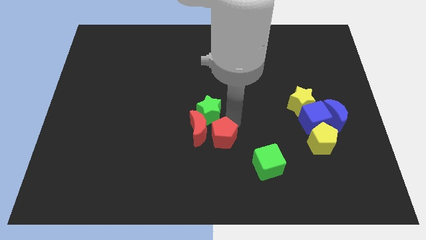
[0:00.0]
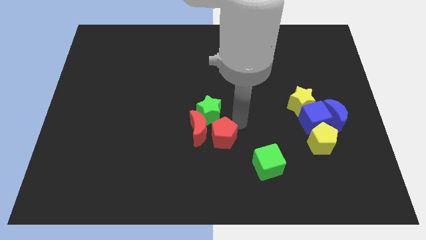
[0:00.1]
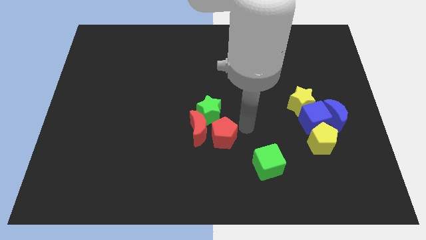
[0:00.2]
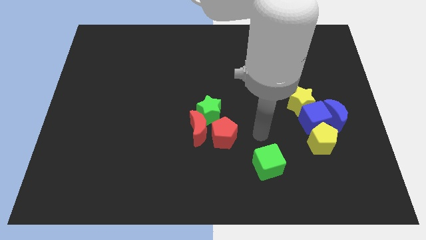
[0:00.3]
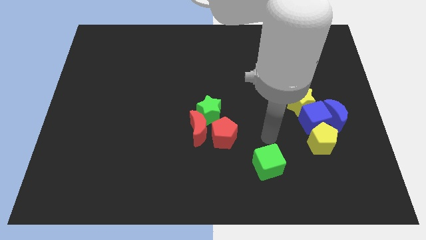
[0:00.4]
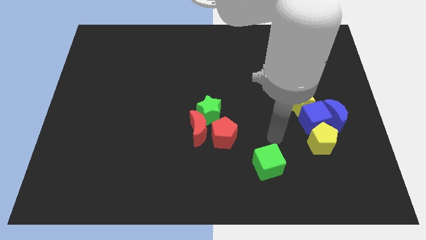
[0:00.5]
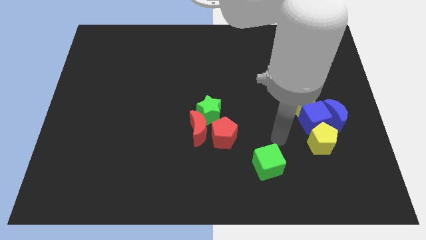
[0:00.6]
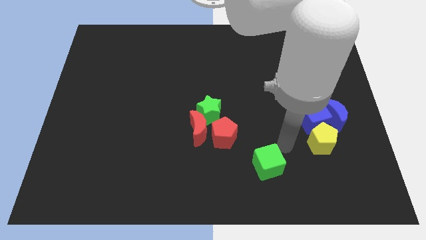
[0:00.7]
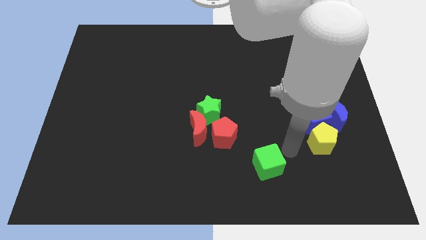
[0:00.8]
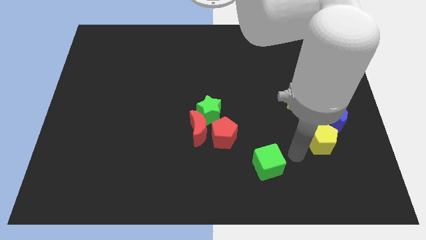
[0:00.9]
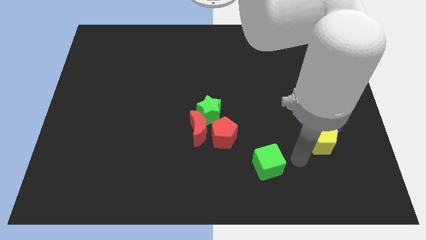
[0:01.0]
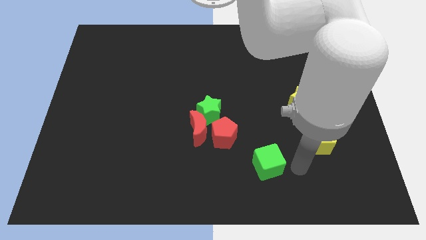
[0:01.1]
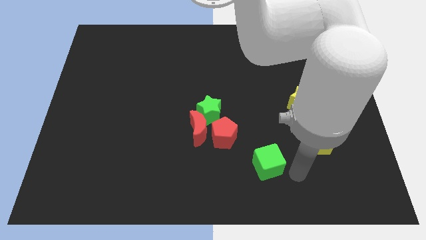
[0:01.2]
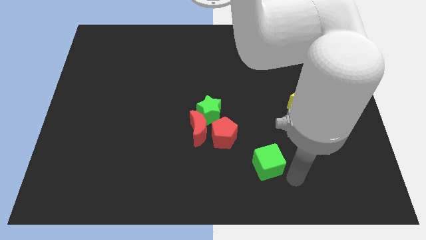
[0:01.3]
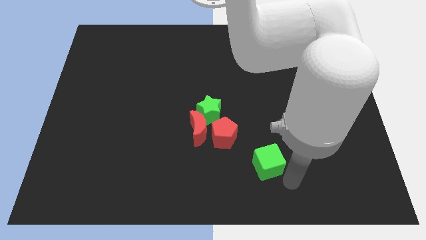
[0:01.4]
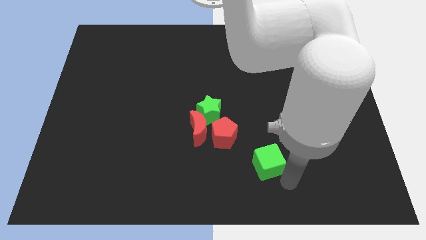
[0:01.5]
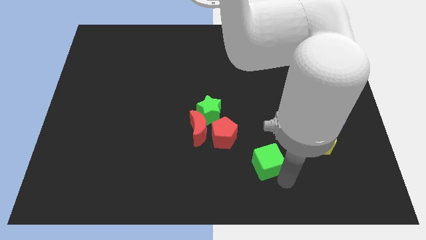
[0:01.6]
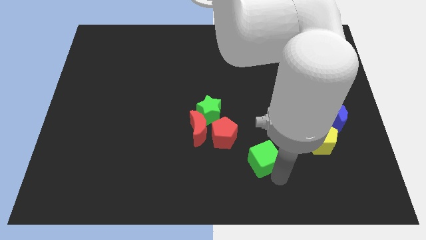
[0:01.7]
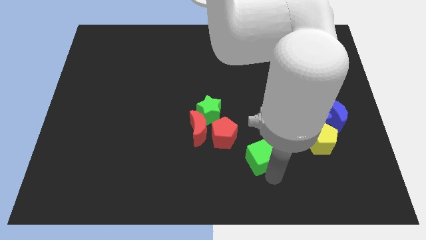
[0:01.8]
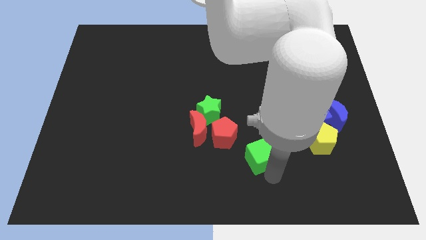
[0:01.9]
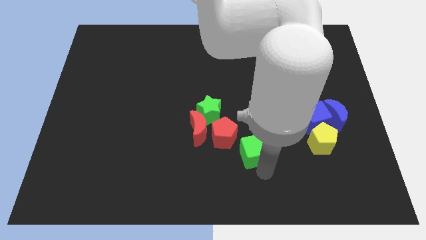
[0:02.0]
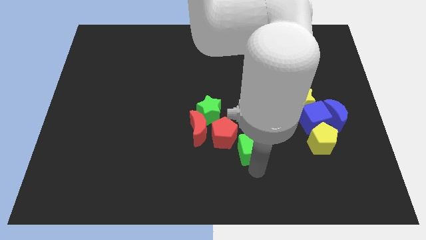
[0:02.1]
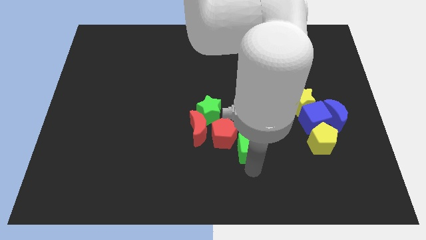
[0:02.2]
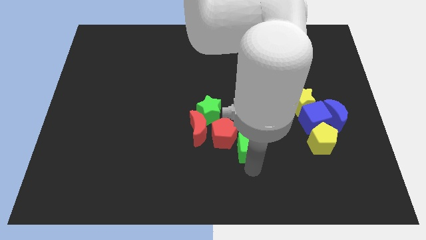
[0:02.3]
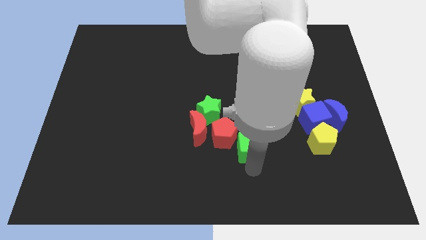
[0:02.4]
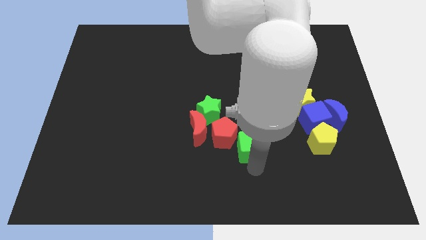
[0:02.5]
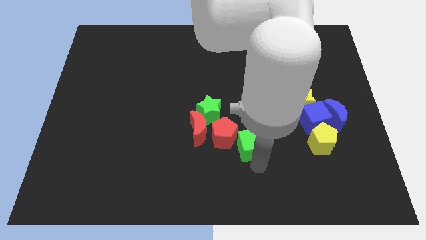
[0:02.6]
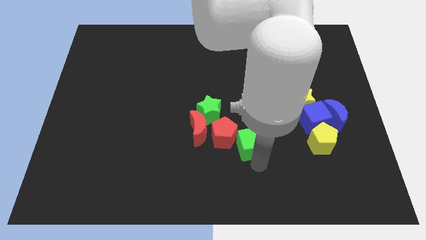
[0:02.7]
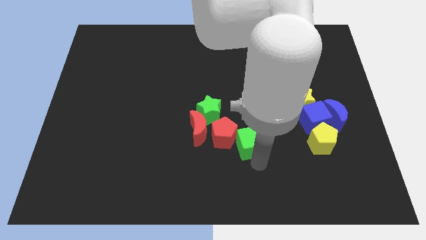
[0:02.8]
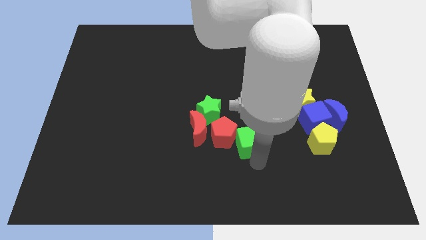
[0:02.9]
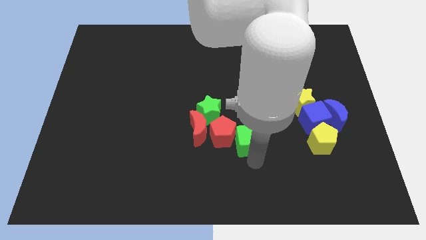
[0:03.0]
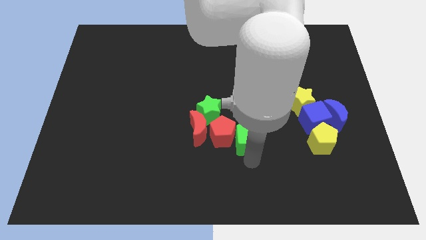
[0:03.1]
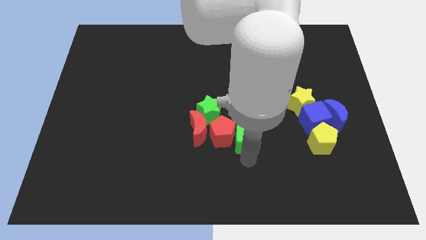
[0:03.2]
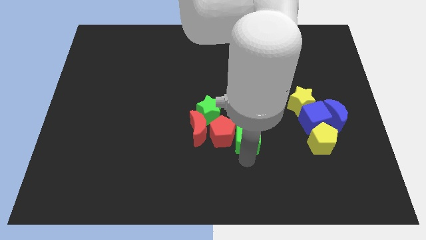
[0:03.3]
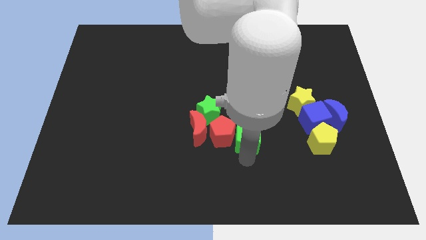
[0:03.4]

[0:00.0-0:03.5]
place the green cube horizontal to the yellow pentagon

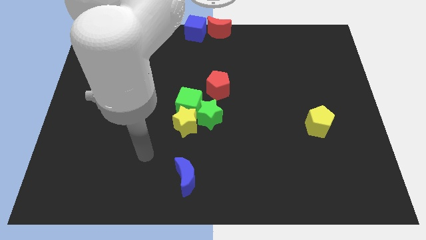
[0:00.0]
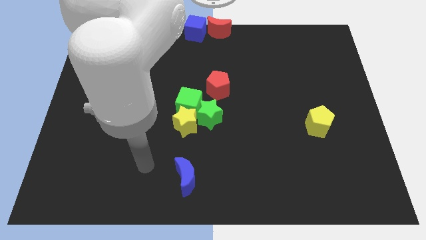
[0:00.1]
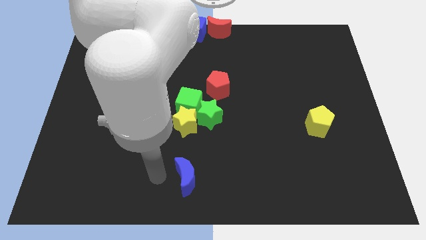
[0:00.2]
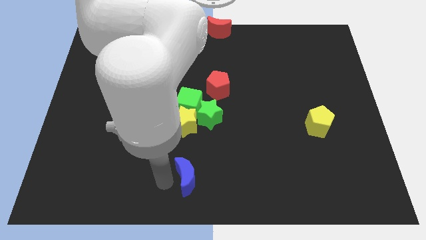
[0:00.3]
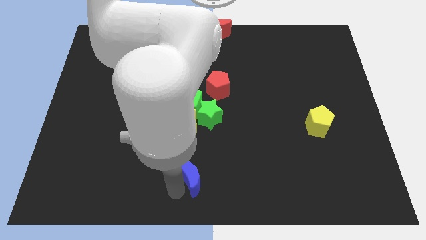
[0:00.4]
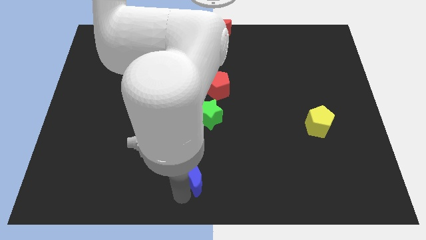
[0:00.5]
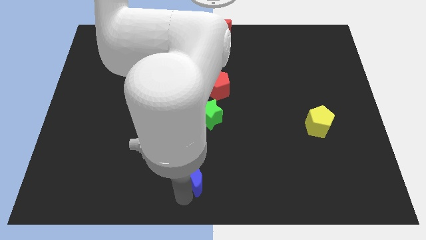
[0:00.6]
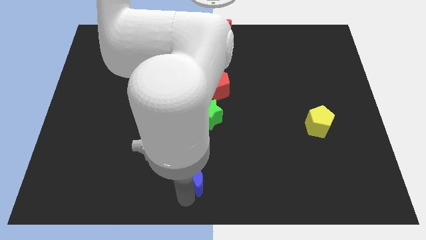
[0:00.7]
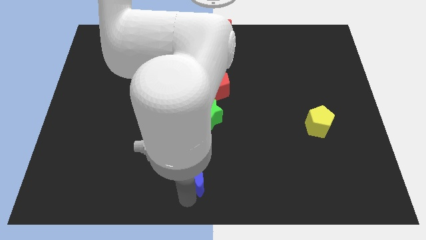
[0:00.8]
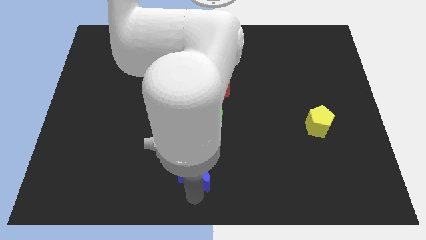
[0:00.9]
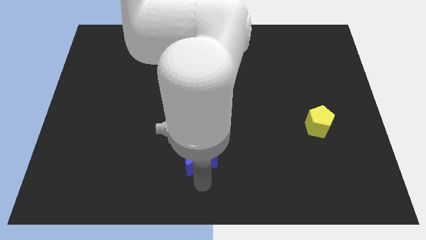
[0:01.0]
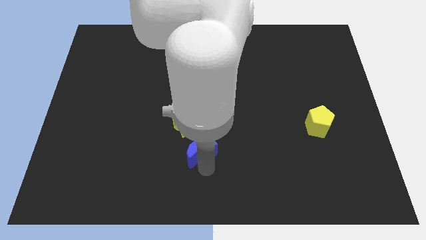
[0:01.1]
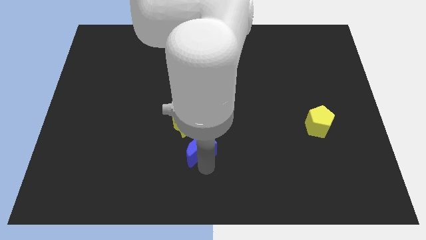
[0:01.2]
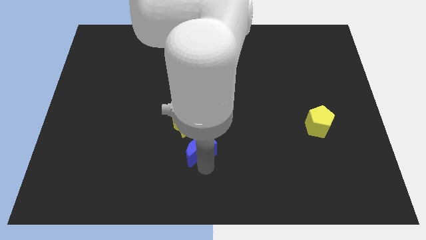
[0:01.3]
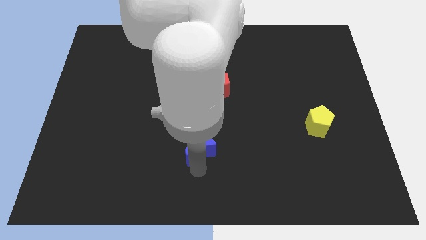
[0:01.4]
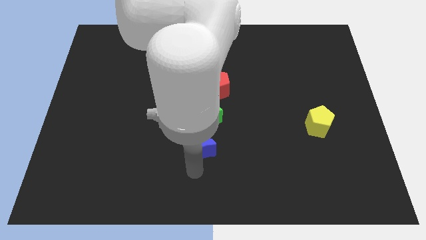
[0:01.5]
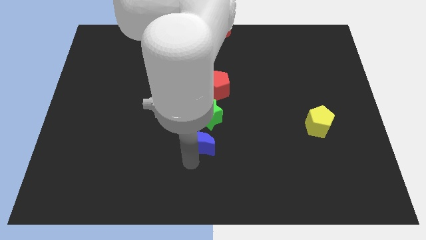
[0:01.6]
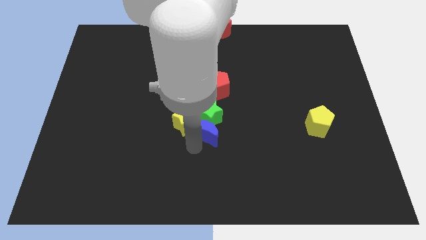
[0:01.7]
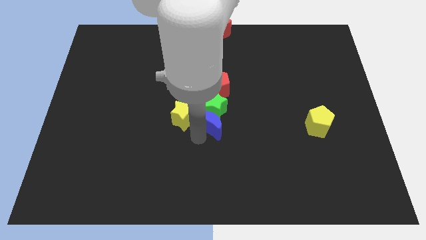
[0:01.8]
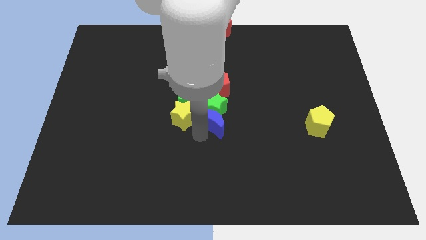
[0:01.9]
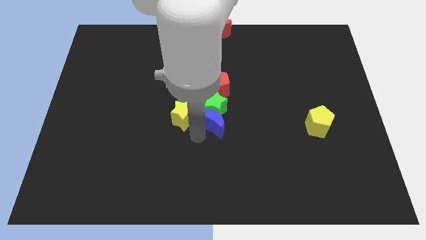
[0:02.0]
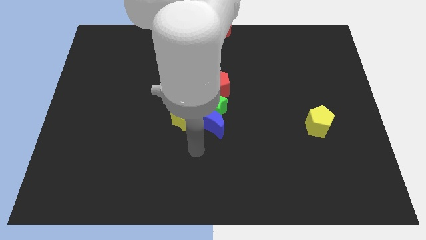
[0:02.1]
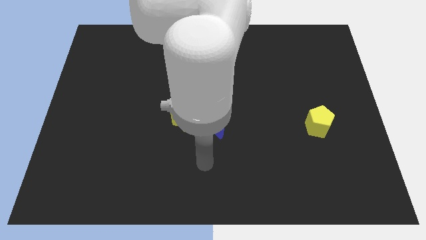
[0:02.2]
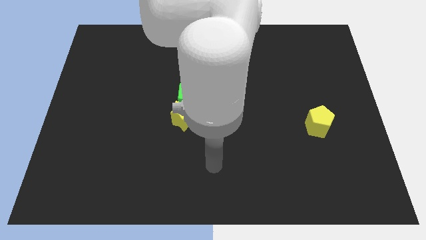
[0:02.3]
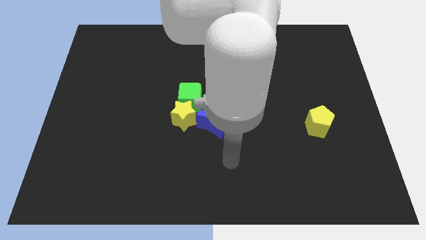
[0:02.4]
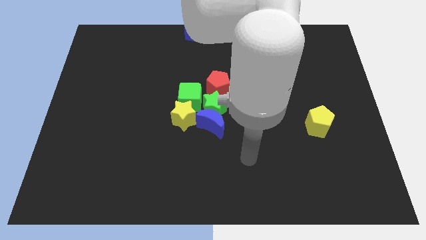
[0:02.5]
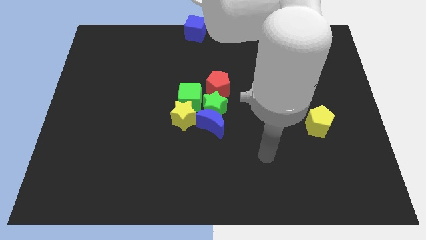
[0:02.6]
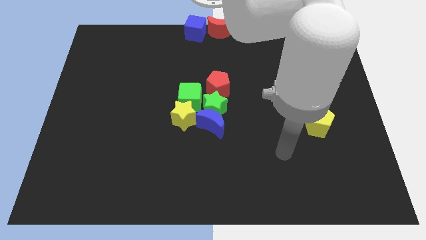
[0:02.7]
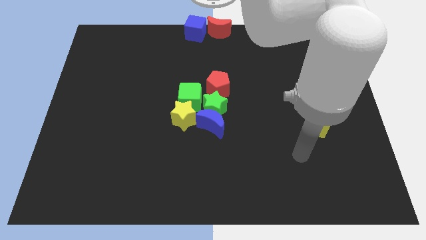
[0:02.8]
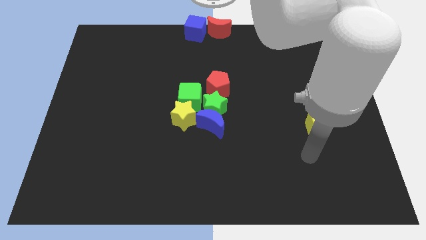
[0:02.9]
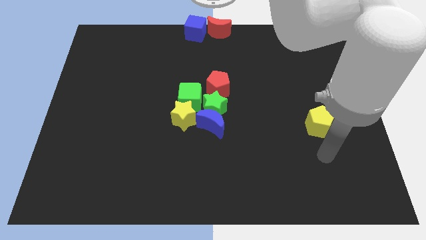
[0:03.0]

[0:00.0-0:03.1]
push the blue moon into the green star

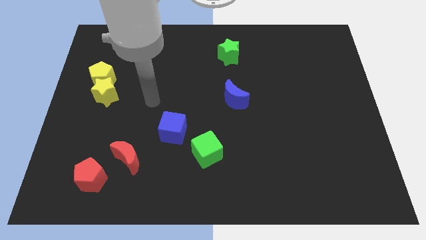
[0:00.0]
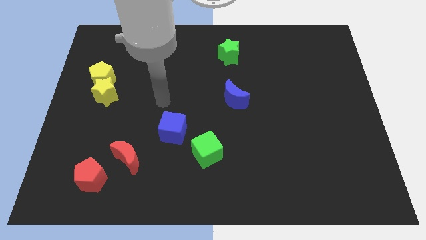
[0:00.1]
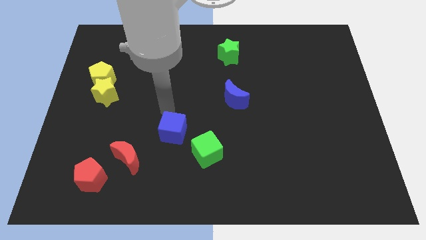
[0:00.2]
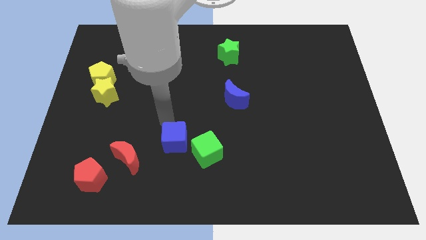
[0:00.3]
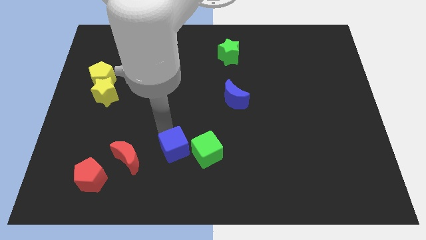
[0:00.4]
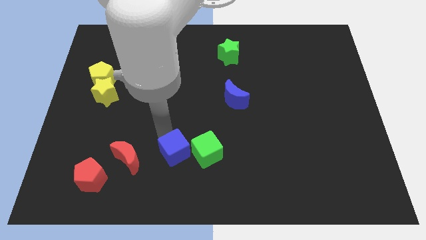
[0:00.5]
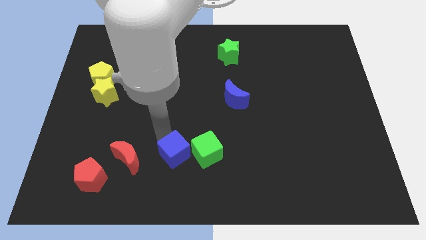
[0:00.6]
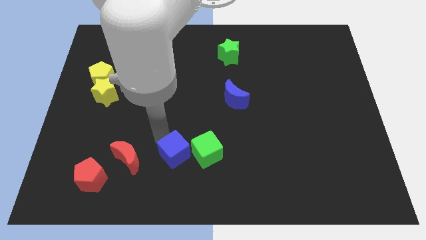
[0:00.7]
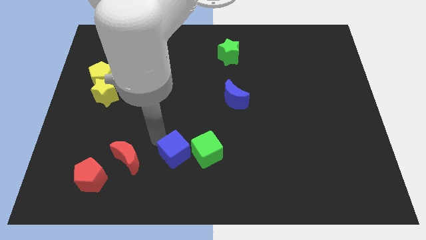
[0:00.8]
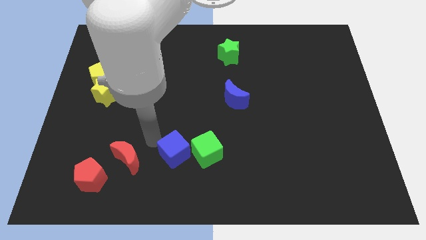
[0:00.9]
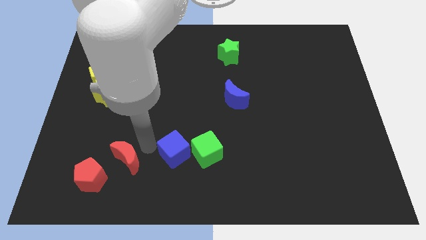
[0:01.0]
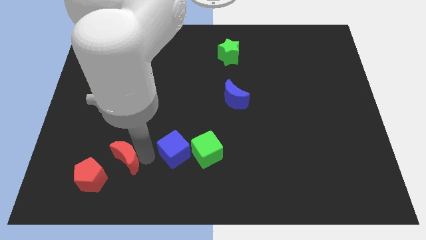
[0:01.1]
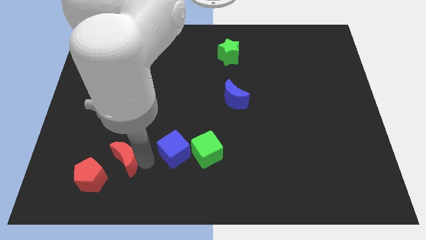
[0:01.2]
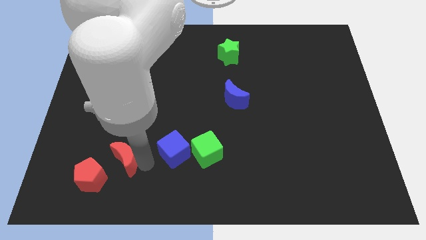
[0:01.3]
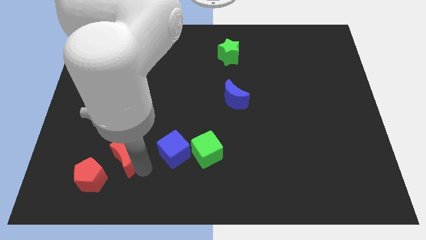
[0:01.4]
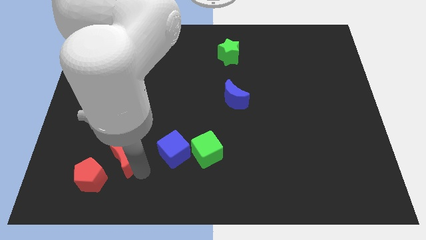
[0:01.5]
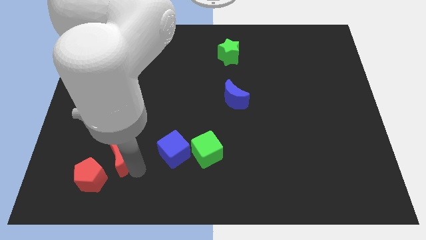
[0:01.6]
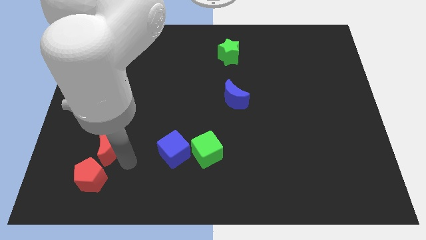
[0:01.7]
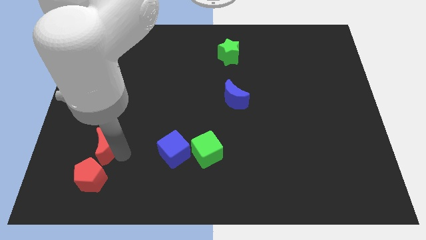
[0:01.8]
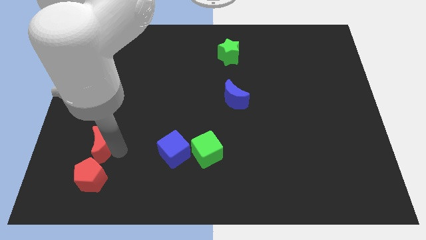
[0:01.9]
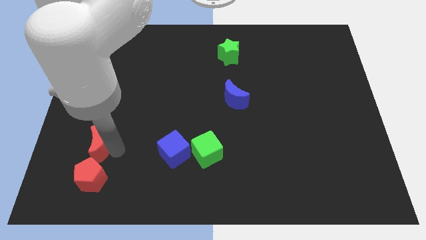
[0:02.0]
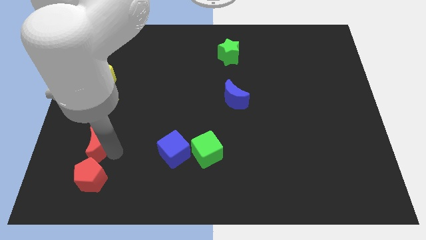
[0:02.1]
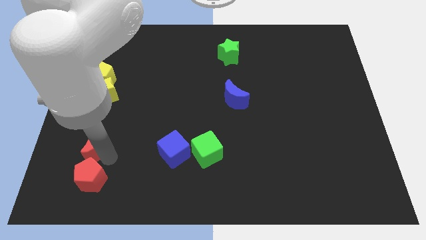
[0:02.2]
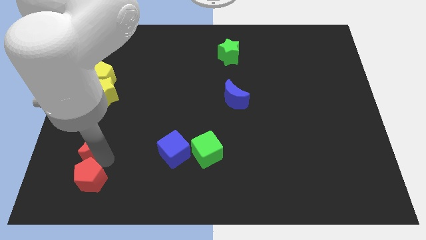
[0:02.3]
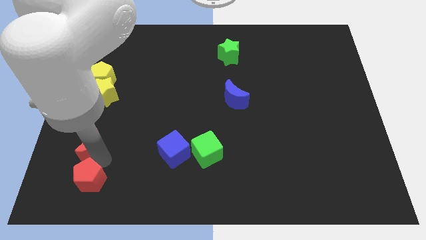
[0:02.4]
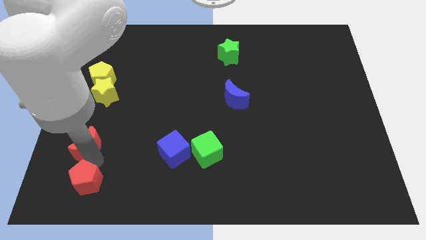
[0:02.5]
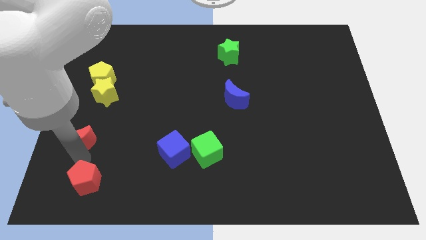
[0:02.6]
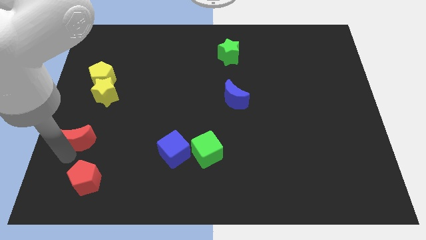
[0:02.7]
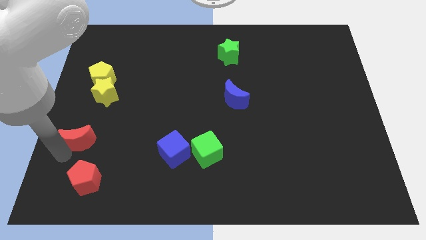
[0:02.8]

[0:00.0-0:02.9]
push red crescent above red pentagon
